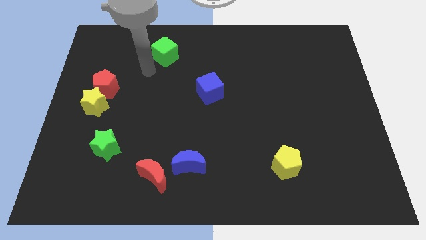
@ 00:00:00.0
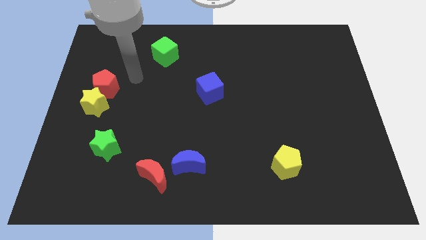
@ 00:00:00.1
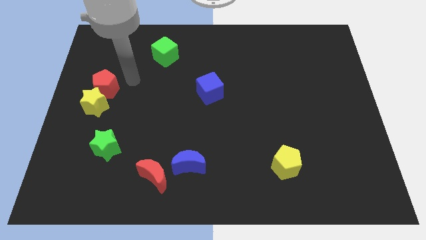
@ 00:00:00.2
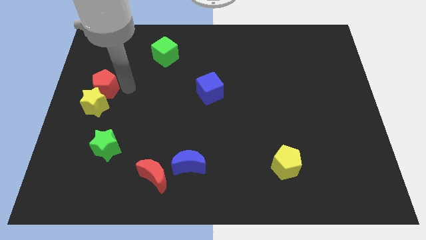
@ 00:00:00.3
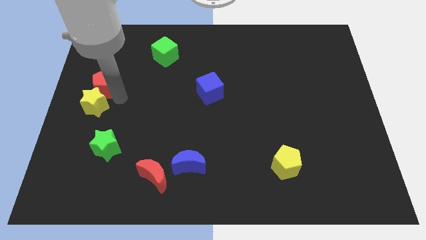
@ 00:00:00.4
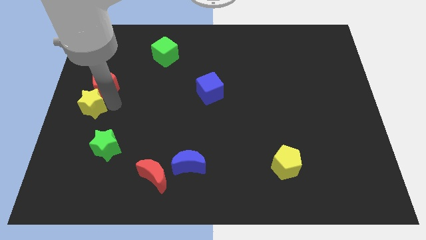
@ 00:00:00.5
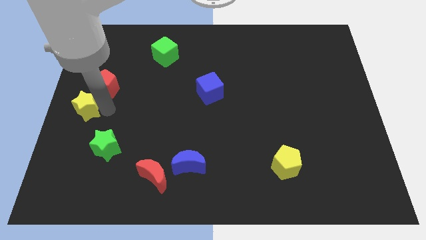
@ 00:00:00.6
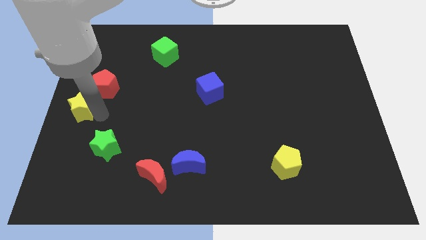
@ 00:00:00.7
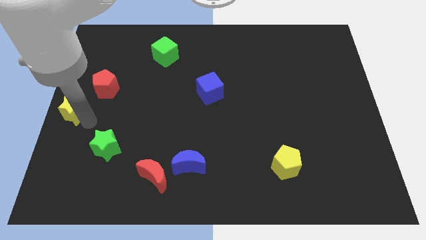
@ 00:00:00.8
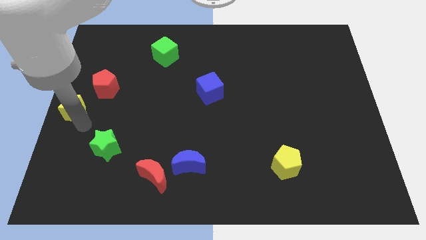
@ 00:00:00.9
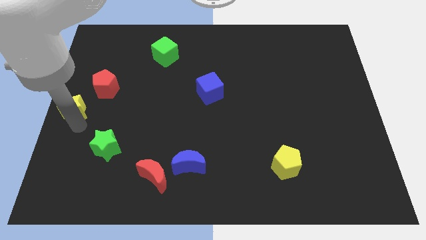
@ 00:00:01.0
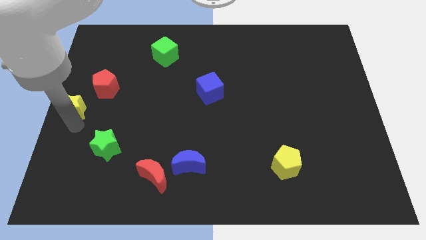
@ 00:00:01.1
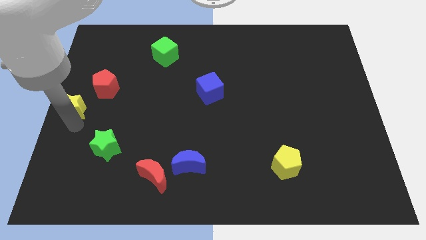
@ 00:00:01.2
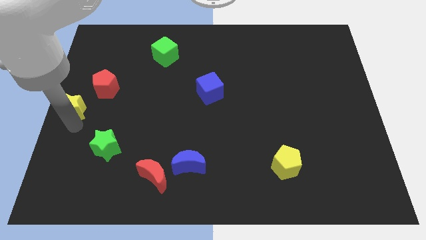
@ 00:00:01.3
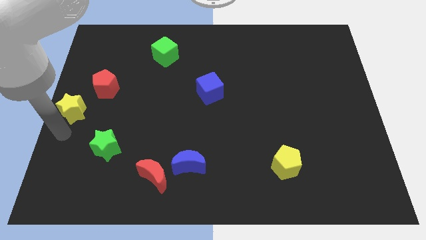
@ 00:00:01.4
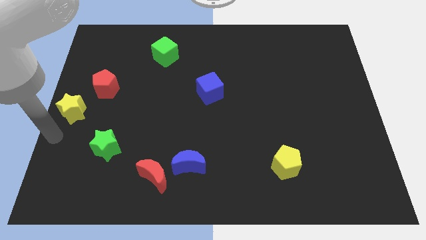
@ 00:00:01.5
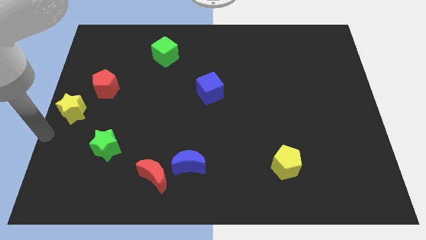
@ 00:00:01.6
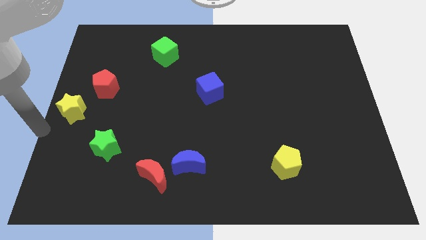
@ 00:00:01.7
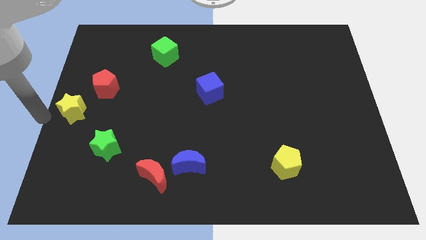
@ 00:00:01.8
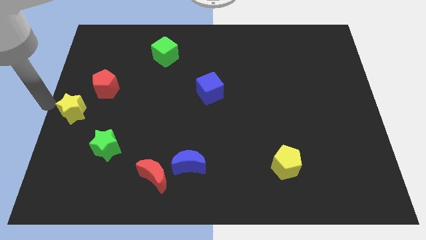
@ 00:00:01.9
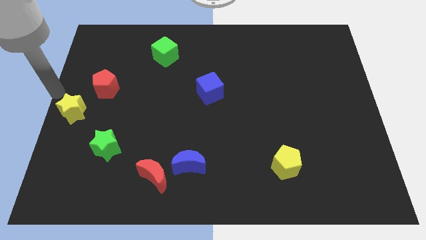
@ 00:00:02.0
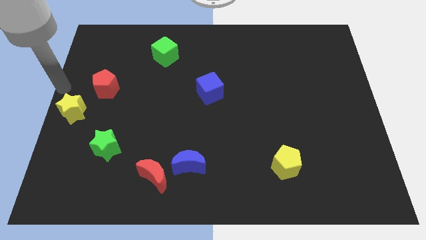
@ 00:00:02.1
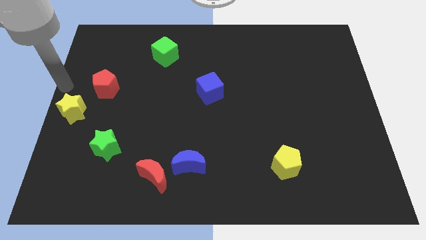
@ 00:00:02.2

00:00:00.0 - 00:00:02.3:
separate the yellow star from the red pentagon

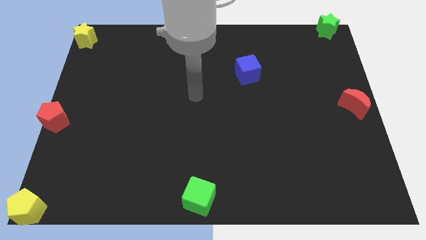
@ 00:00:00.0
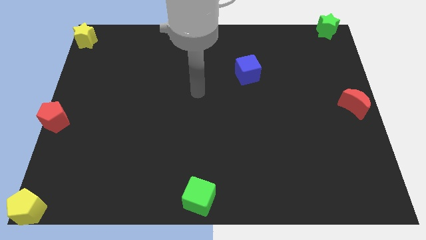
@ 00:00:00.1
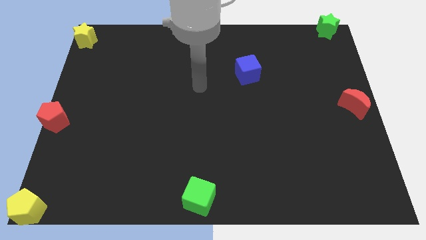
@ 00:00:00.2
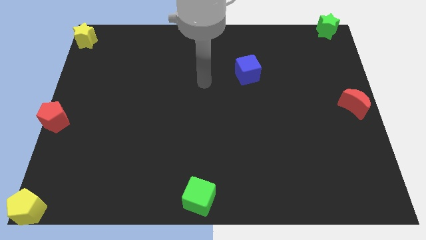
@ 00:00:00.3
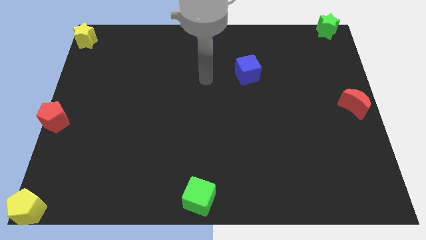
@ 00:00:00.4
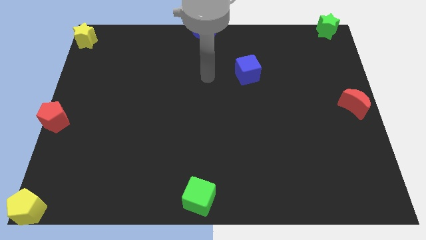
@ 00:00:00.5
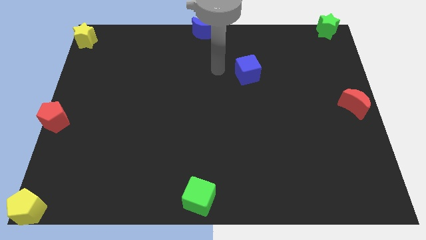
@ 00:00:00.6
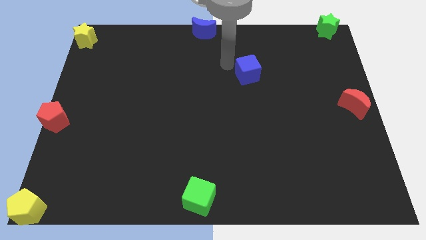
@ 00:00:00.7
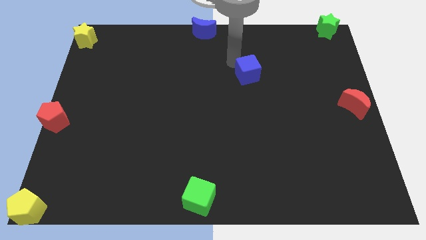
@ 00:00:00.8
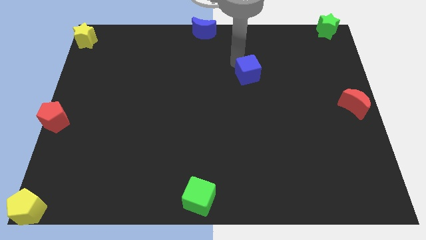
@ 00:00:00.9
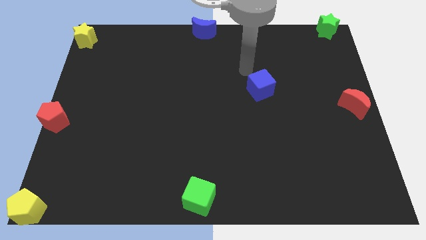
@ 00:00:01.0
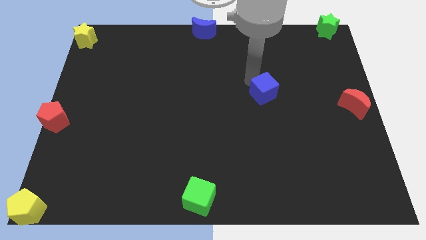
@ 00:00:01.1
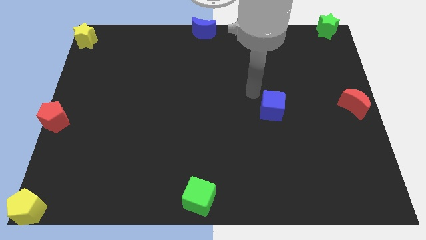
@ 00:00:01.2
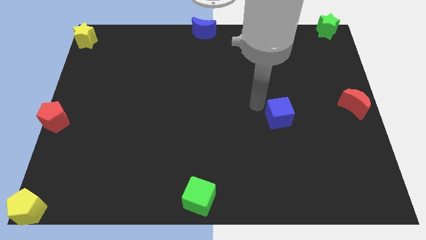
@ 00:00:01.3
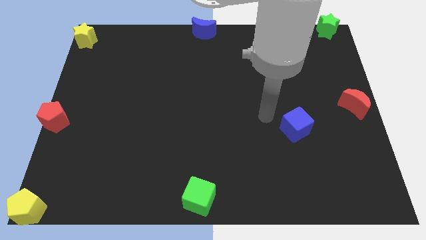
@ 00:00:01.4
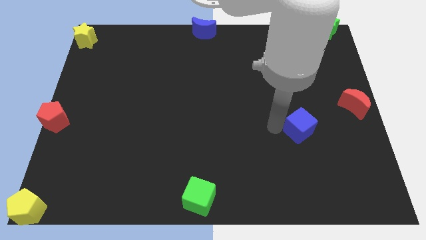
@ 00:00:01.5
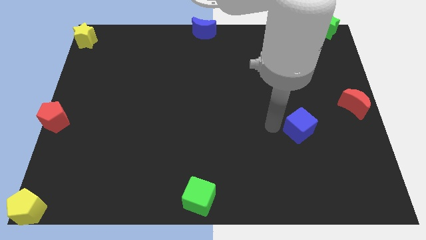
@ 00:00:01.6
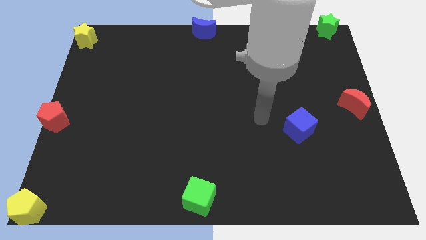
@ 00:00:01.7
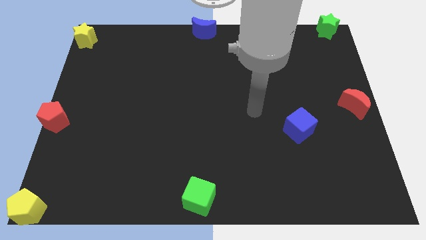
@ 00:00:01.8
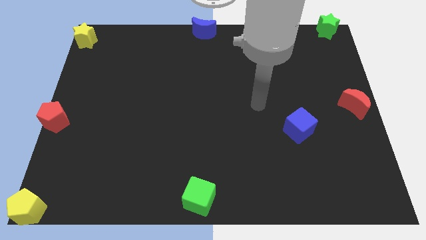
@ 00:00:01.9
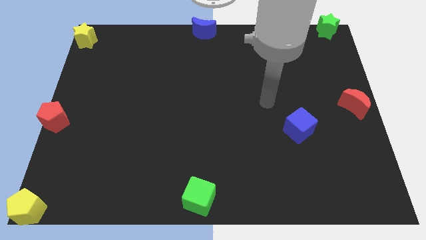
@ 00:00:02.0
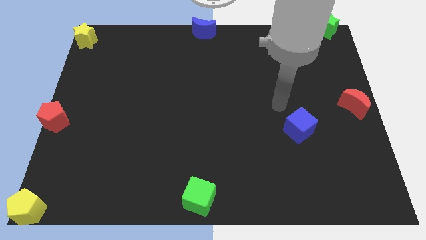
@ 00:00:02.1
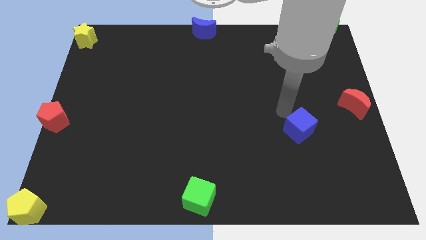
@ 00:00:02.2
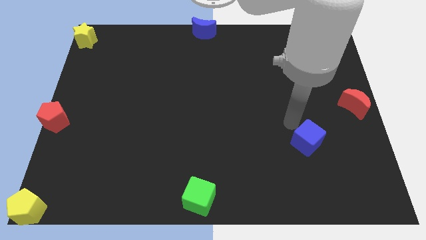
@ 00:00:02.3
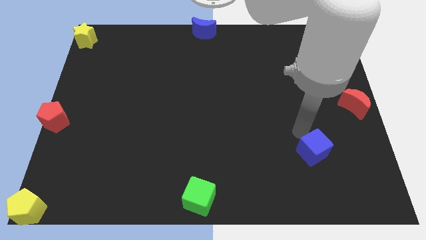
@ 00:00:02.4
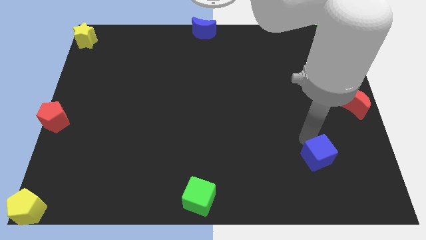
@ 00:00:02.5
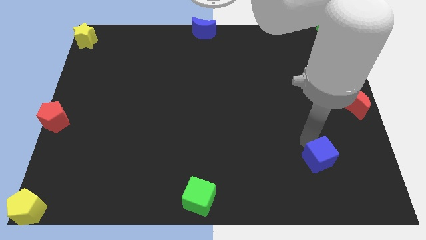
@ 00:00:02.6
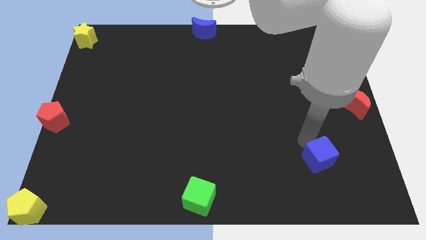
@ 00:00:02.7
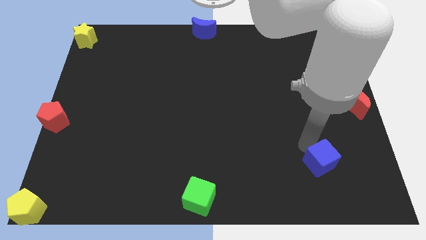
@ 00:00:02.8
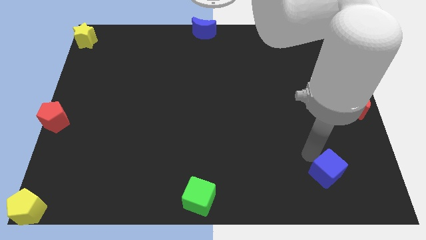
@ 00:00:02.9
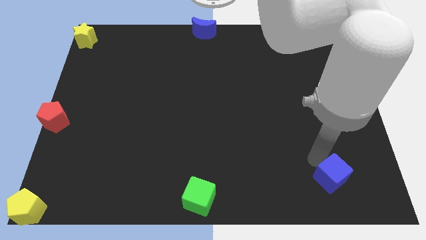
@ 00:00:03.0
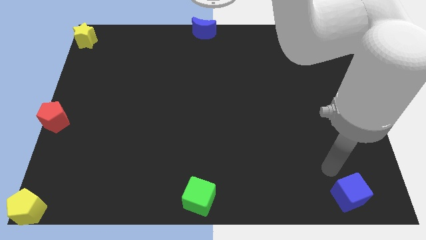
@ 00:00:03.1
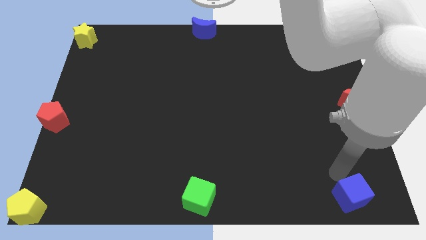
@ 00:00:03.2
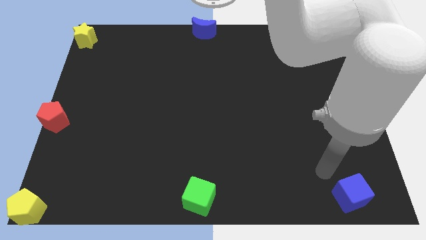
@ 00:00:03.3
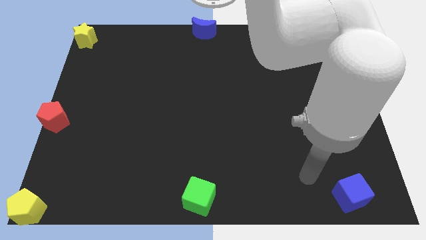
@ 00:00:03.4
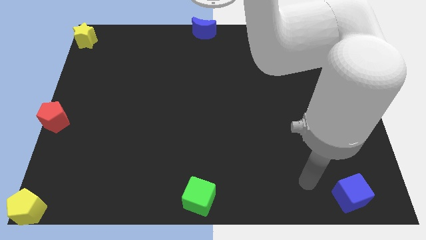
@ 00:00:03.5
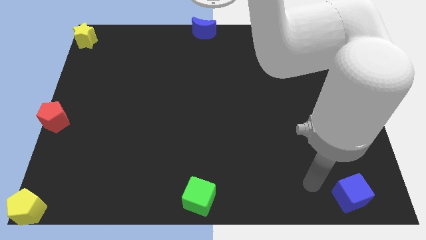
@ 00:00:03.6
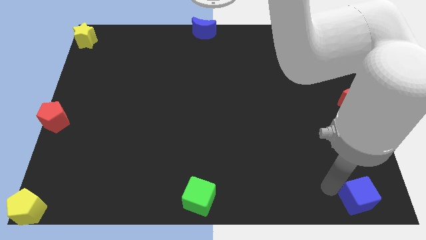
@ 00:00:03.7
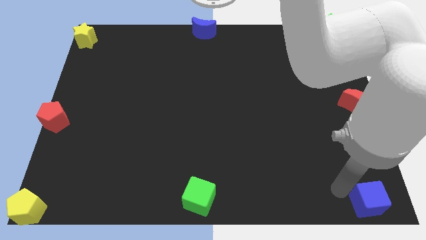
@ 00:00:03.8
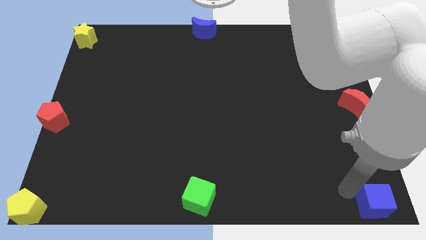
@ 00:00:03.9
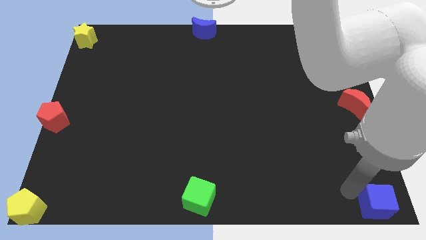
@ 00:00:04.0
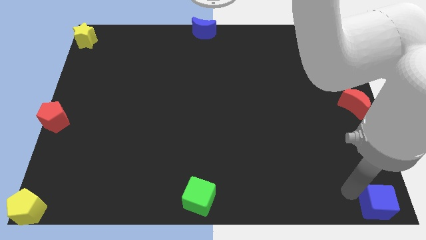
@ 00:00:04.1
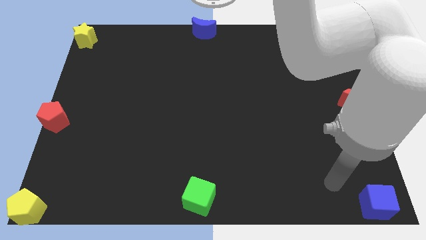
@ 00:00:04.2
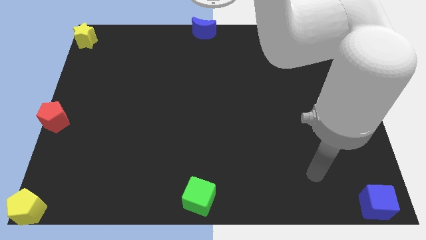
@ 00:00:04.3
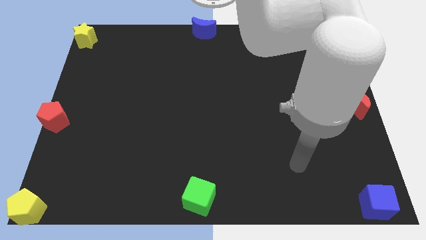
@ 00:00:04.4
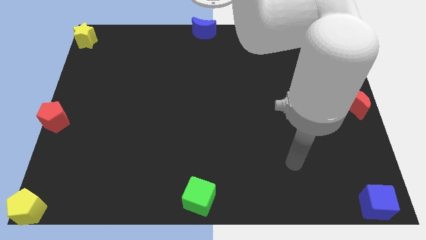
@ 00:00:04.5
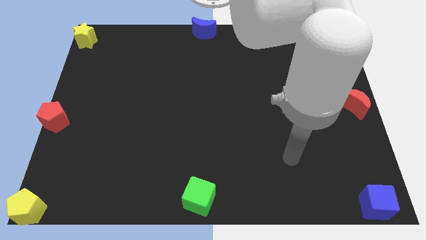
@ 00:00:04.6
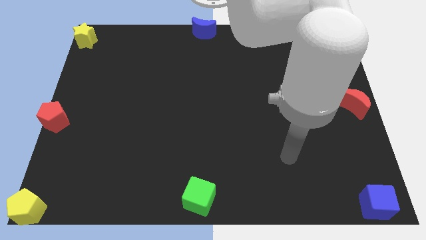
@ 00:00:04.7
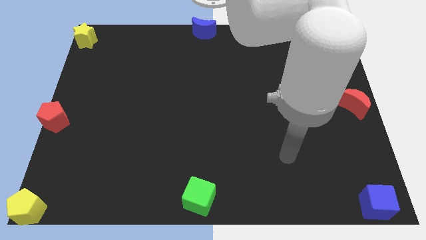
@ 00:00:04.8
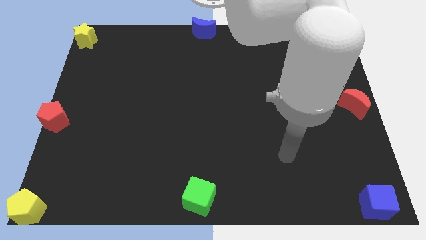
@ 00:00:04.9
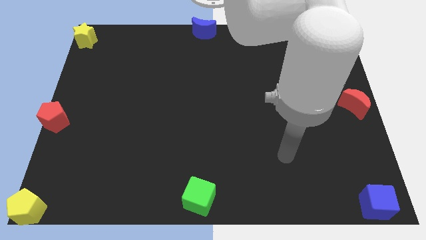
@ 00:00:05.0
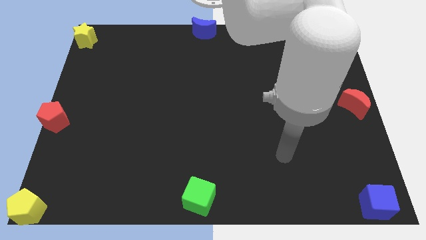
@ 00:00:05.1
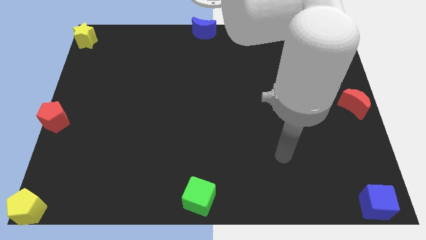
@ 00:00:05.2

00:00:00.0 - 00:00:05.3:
slide the blue cube to bottom right corner of the board

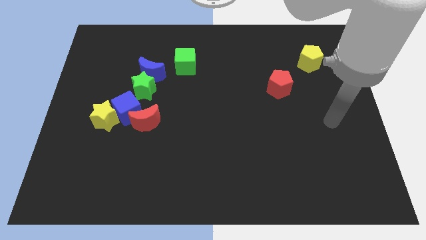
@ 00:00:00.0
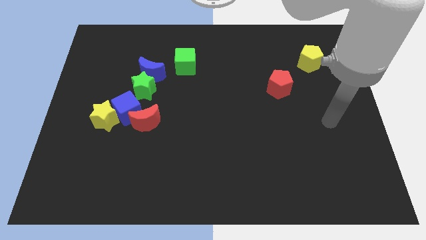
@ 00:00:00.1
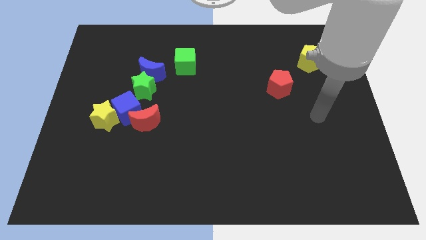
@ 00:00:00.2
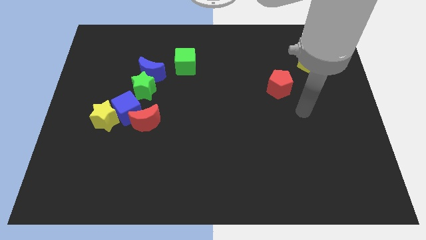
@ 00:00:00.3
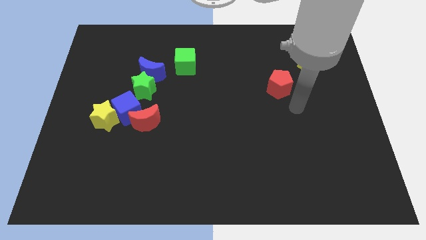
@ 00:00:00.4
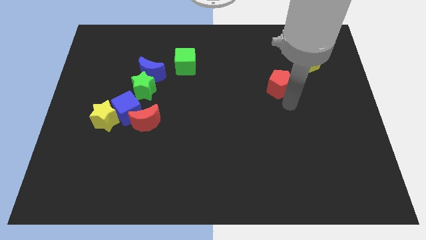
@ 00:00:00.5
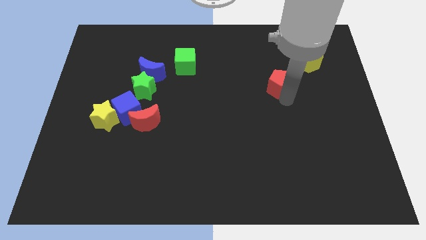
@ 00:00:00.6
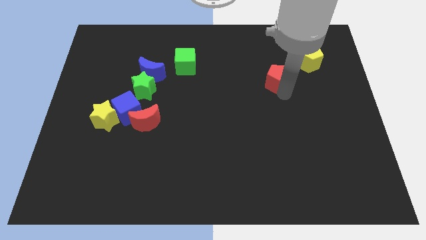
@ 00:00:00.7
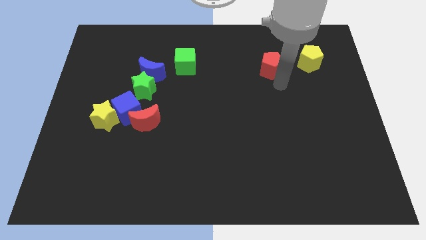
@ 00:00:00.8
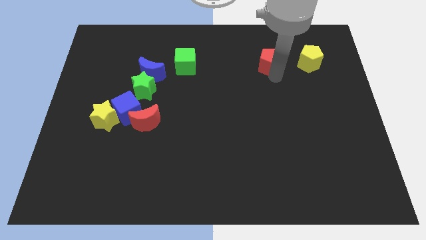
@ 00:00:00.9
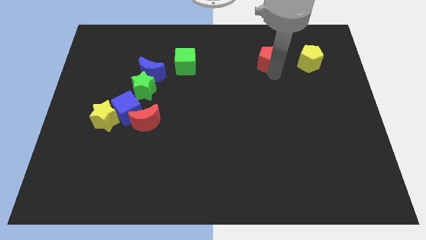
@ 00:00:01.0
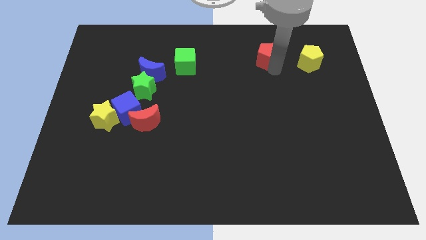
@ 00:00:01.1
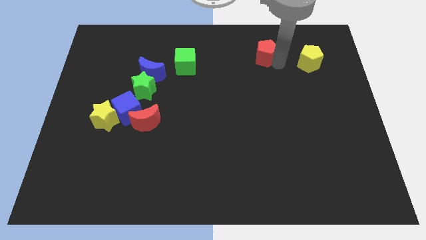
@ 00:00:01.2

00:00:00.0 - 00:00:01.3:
place the red pentagon parallel to yellow pentagon
